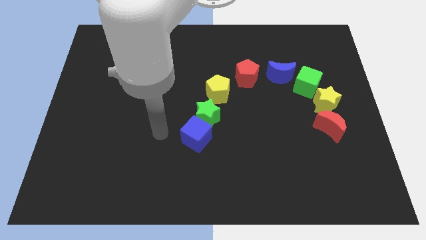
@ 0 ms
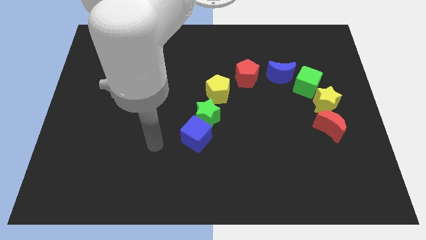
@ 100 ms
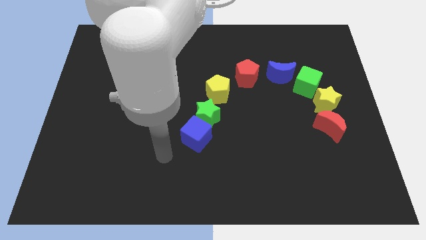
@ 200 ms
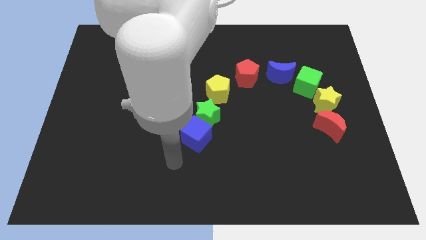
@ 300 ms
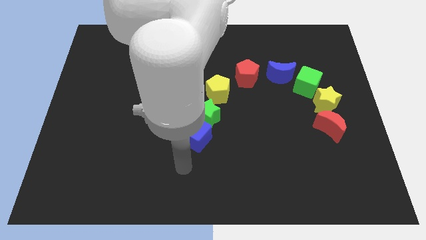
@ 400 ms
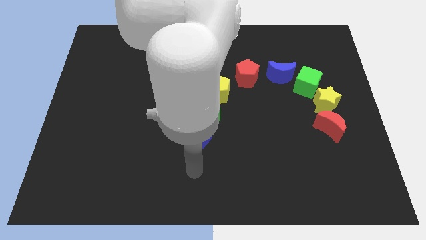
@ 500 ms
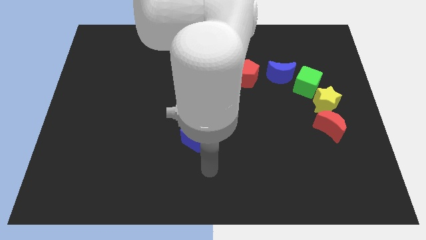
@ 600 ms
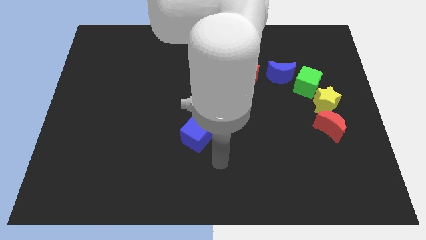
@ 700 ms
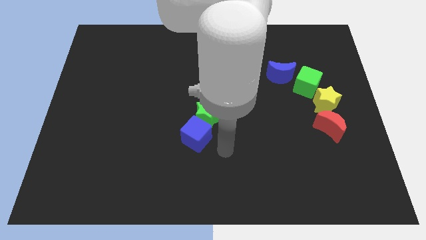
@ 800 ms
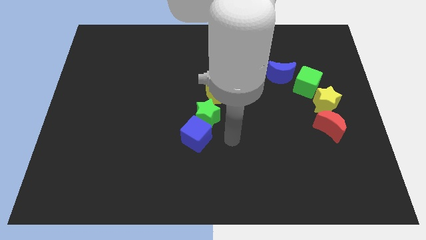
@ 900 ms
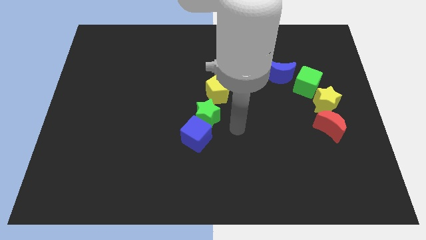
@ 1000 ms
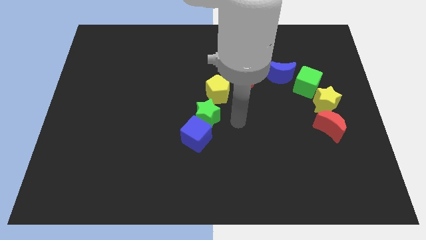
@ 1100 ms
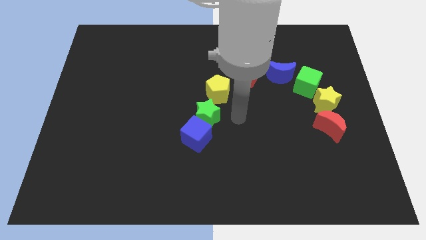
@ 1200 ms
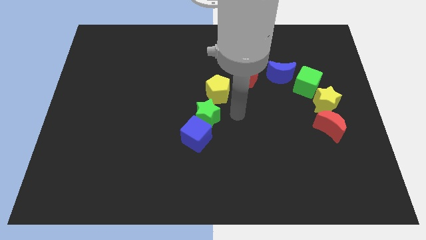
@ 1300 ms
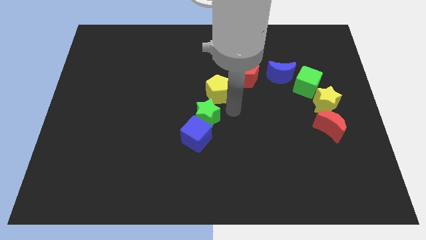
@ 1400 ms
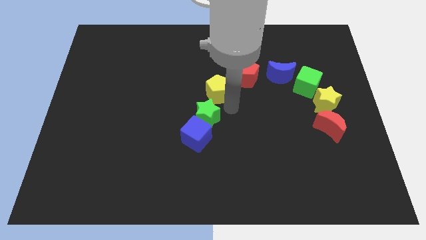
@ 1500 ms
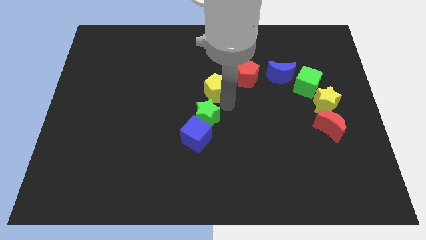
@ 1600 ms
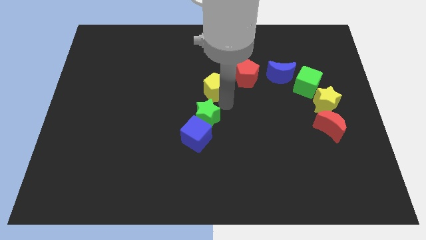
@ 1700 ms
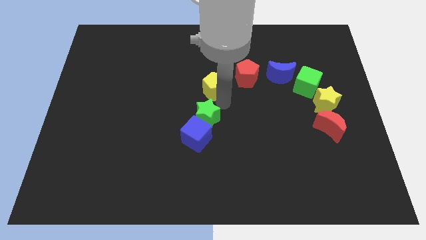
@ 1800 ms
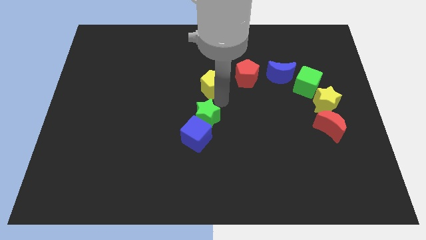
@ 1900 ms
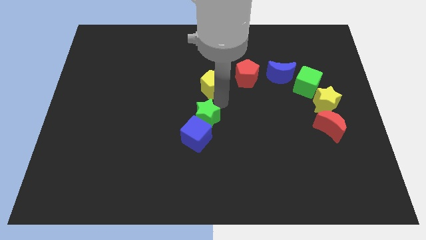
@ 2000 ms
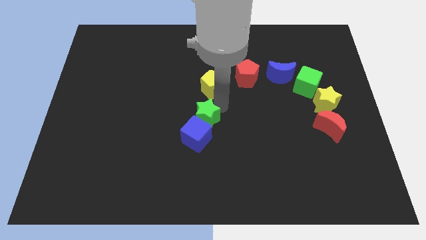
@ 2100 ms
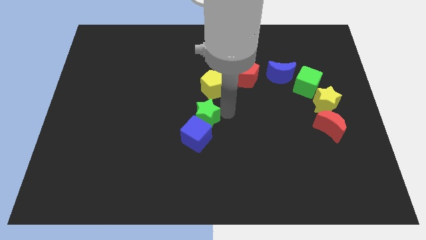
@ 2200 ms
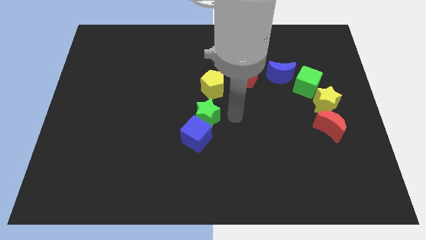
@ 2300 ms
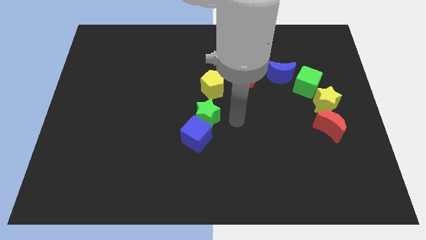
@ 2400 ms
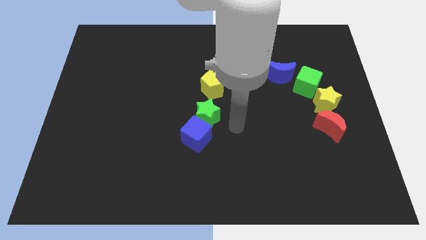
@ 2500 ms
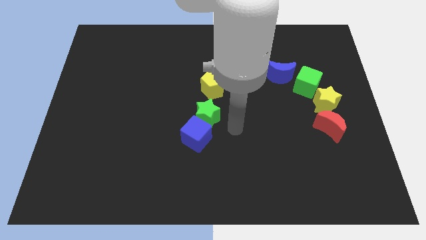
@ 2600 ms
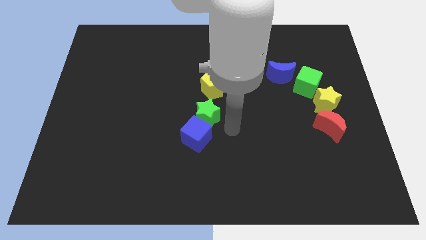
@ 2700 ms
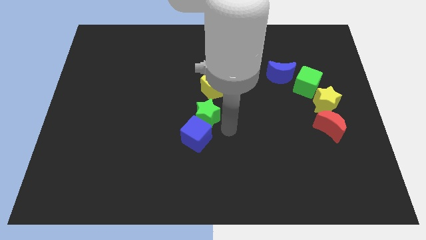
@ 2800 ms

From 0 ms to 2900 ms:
move your arm away from the blue cube

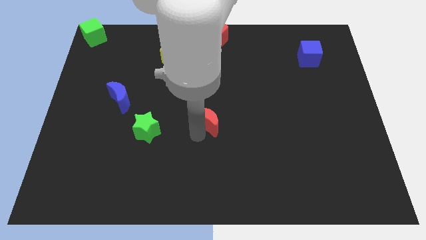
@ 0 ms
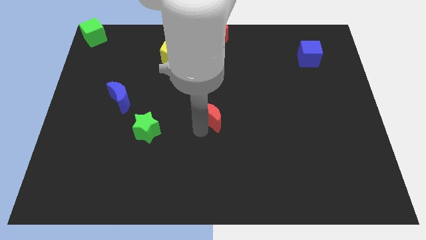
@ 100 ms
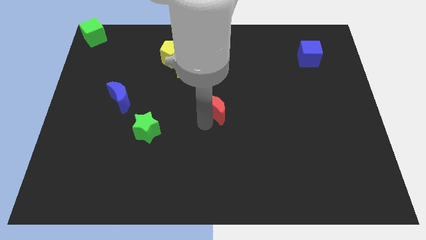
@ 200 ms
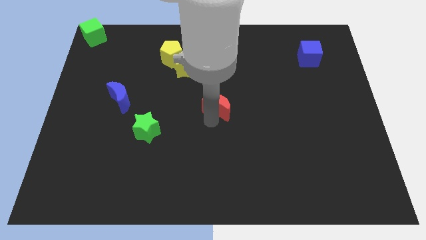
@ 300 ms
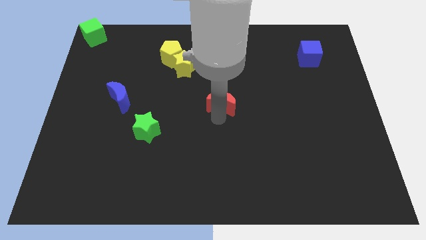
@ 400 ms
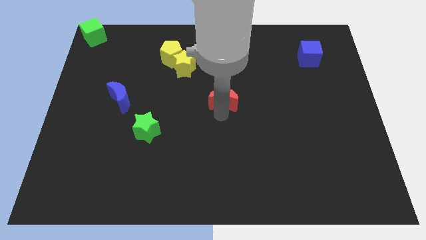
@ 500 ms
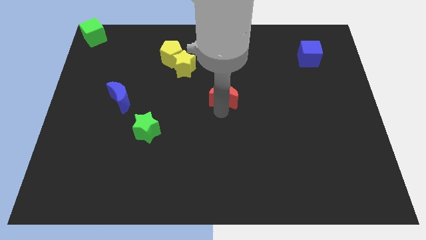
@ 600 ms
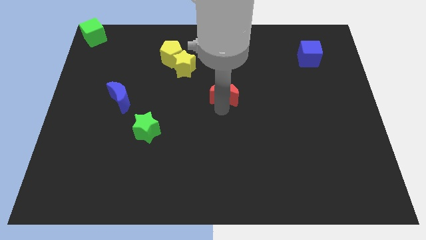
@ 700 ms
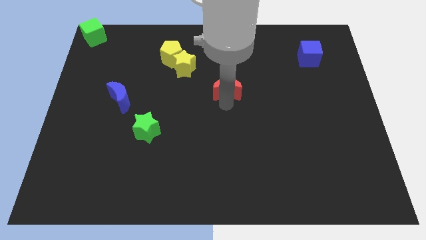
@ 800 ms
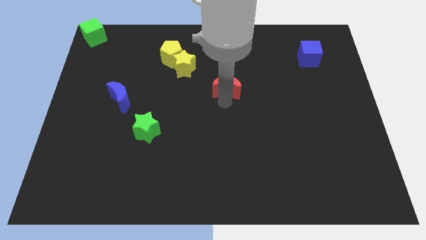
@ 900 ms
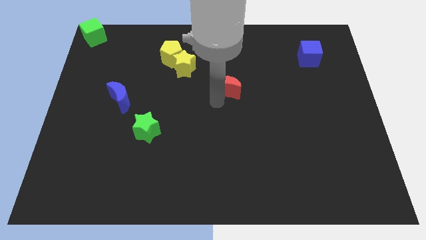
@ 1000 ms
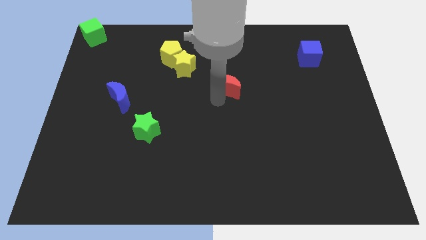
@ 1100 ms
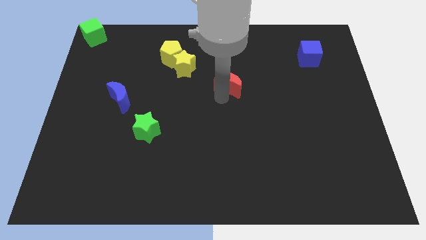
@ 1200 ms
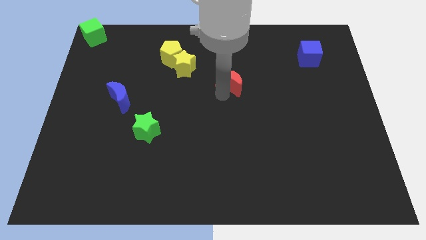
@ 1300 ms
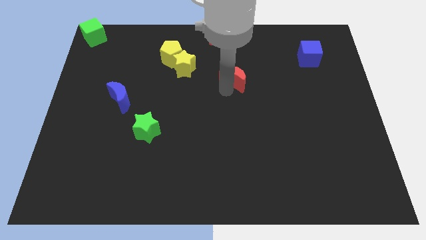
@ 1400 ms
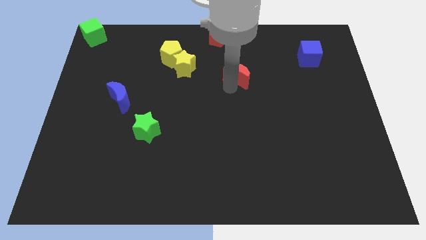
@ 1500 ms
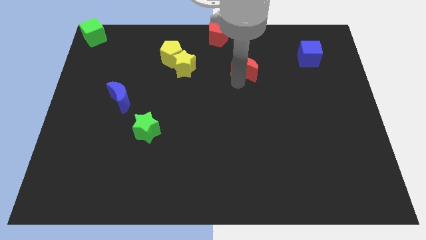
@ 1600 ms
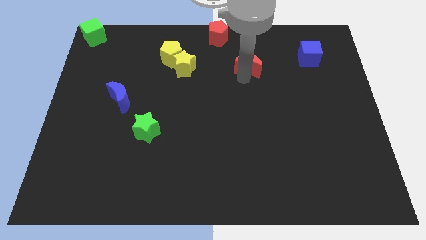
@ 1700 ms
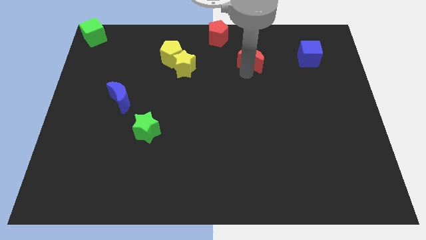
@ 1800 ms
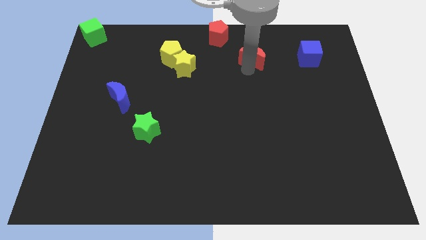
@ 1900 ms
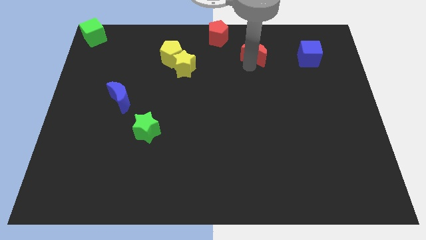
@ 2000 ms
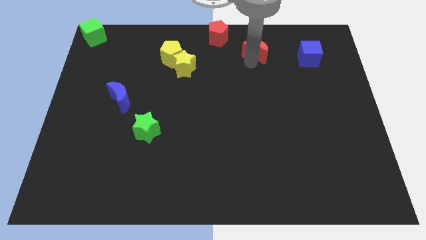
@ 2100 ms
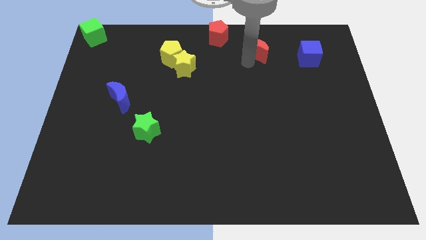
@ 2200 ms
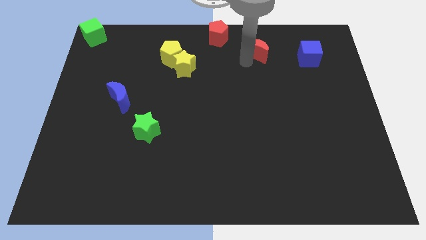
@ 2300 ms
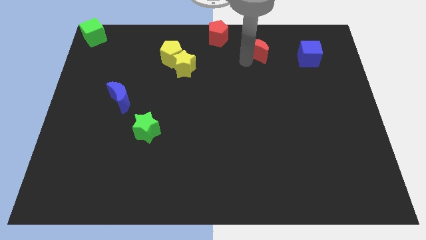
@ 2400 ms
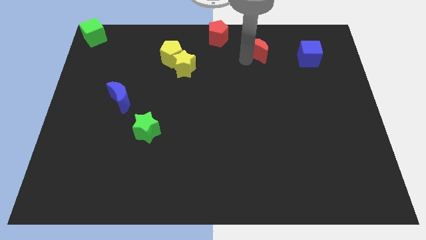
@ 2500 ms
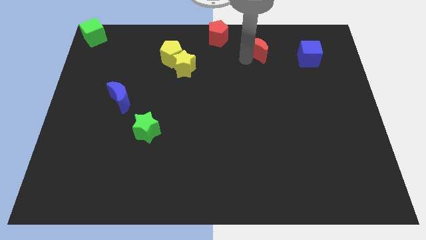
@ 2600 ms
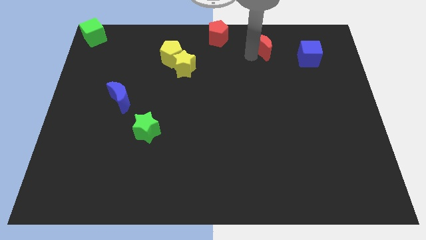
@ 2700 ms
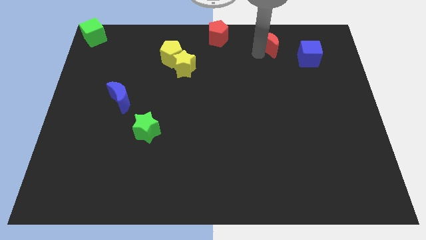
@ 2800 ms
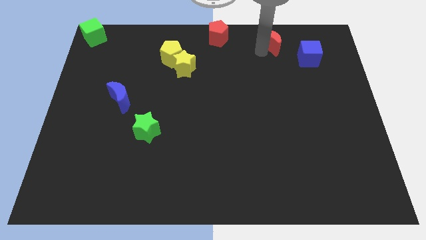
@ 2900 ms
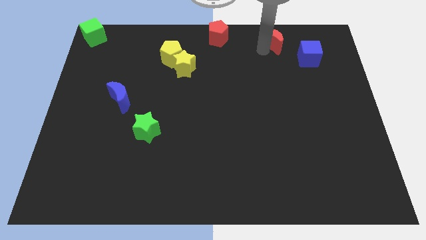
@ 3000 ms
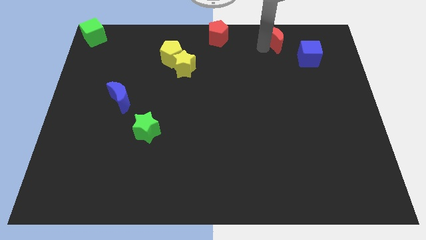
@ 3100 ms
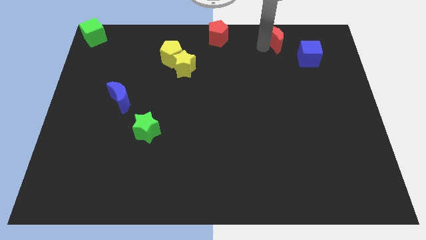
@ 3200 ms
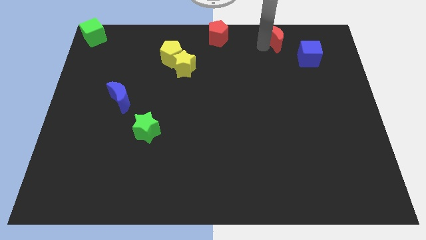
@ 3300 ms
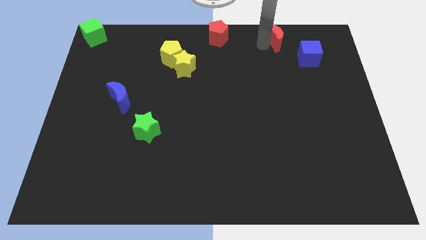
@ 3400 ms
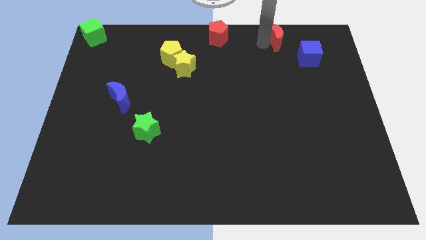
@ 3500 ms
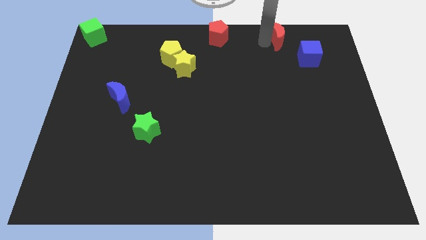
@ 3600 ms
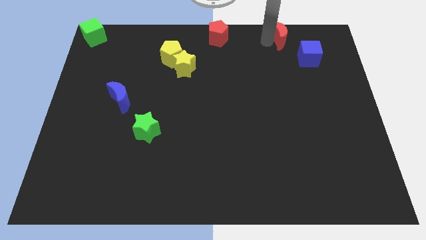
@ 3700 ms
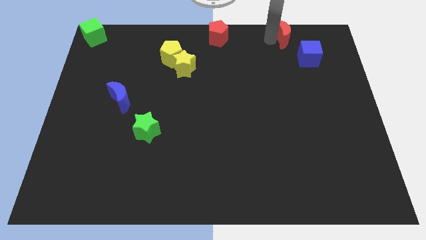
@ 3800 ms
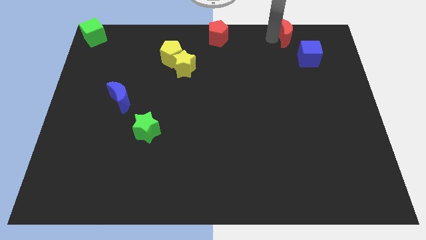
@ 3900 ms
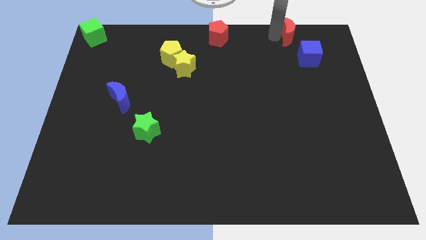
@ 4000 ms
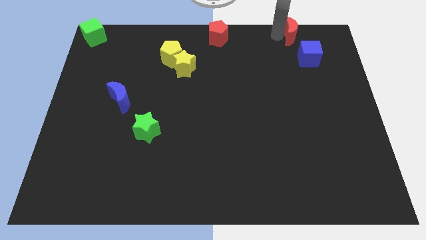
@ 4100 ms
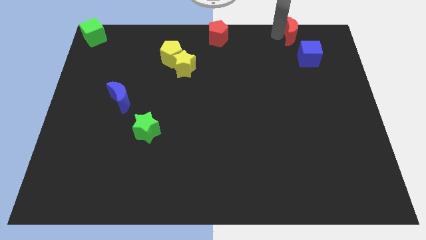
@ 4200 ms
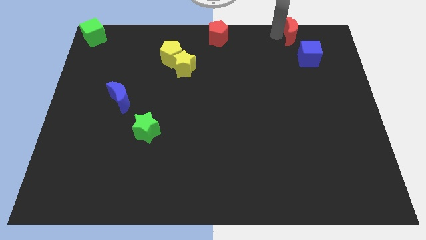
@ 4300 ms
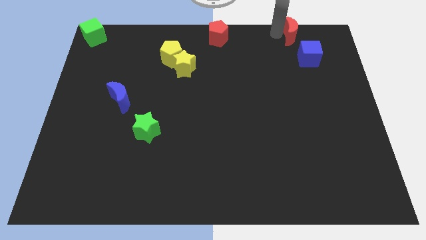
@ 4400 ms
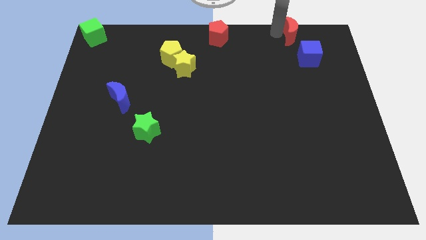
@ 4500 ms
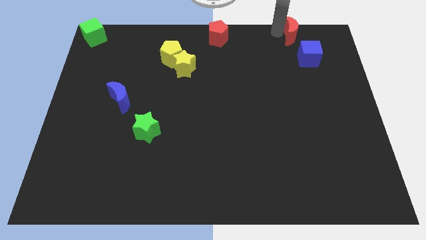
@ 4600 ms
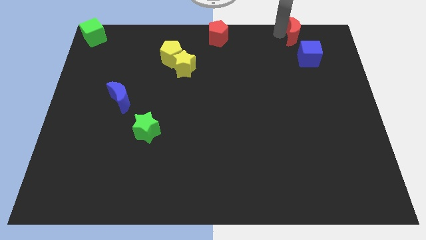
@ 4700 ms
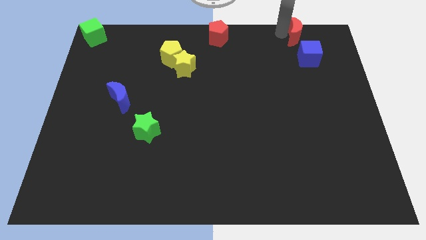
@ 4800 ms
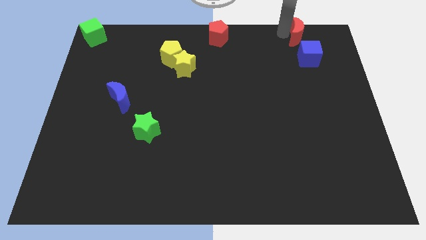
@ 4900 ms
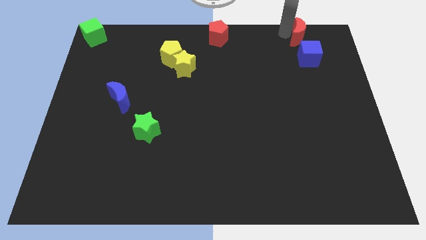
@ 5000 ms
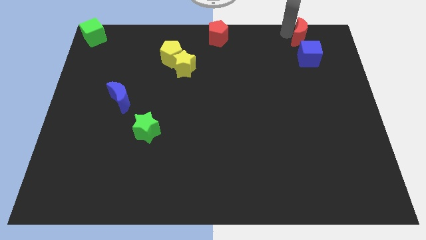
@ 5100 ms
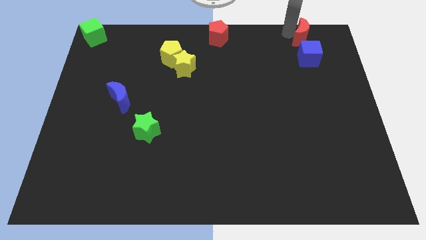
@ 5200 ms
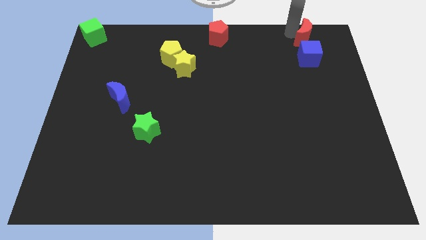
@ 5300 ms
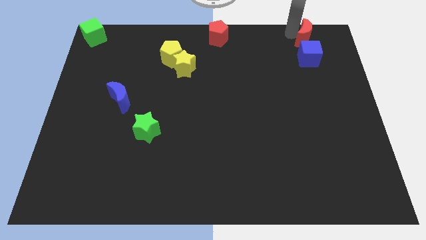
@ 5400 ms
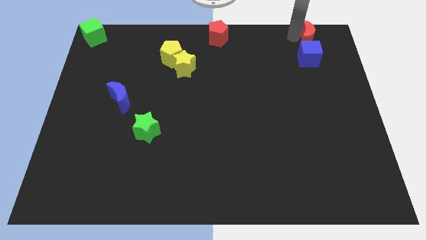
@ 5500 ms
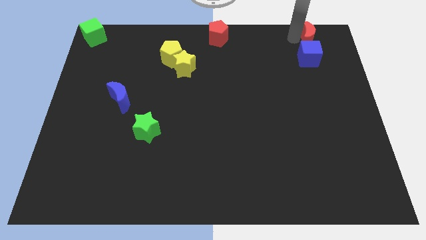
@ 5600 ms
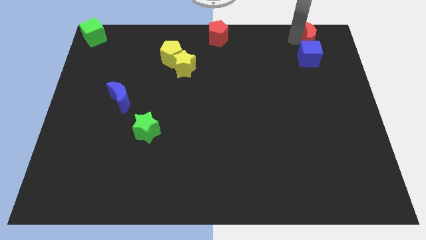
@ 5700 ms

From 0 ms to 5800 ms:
place the red crescent on top of the blue cube

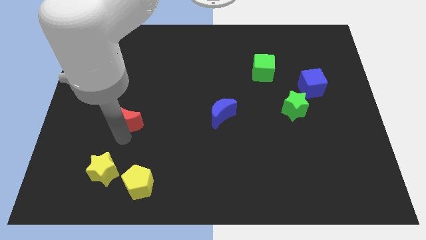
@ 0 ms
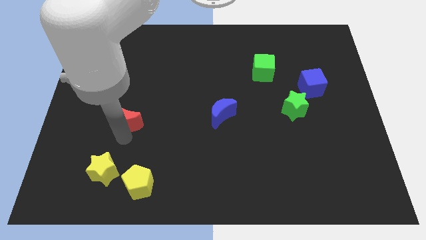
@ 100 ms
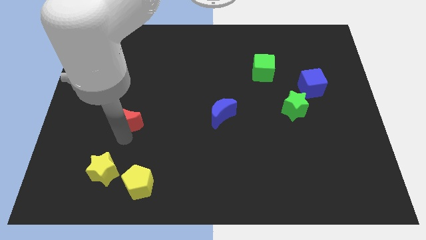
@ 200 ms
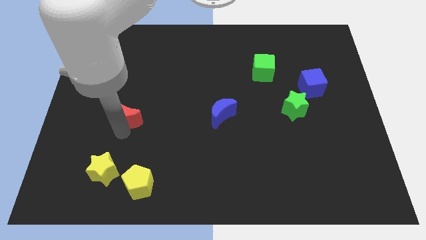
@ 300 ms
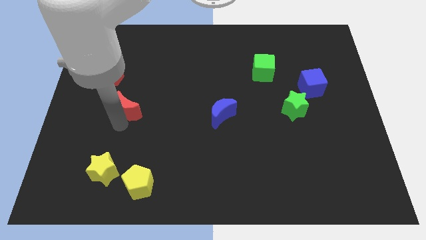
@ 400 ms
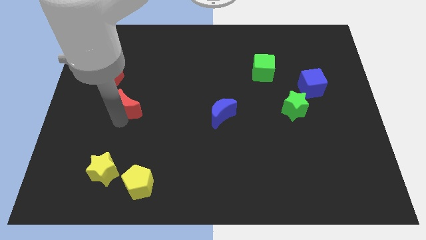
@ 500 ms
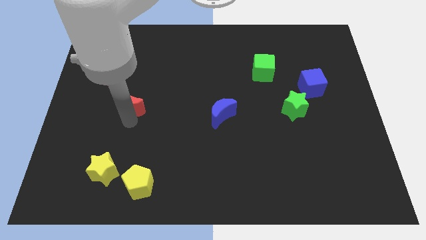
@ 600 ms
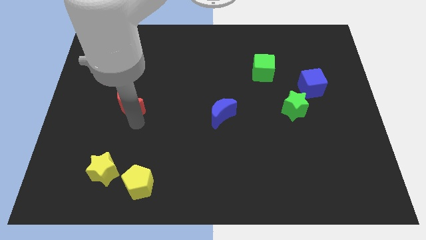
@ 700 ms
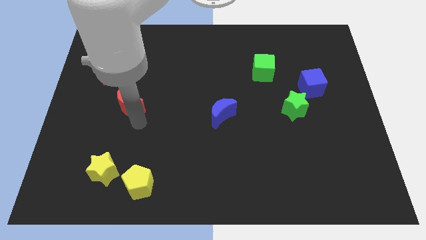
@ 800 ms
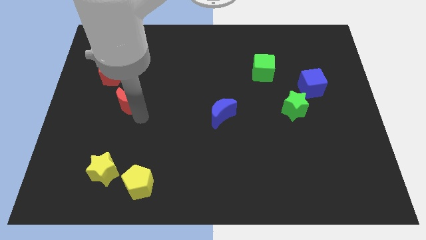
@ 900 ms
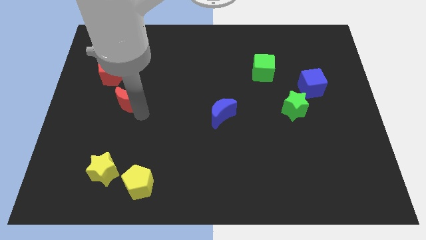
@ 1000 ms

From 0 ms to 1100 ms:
slide red moon towards red pentagon
